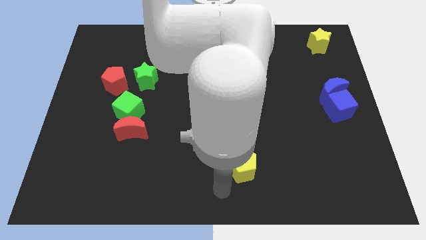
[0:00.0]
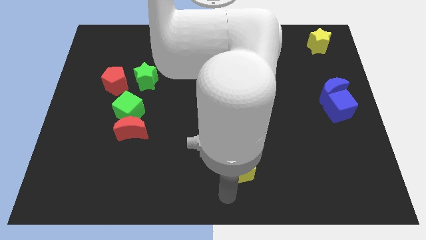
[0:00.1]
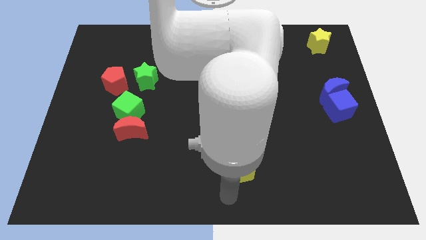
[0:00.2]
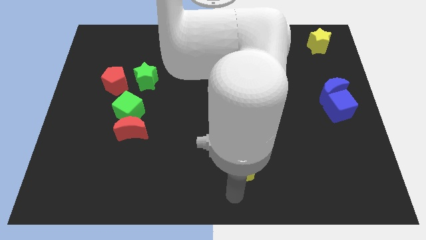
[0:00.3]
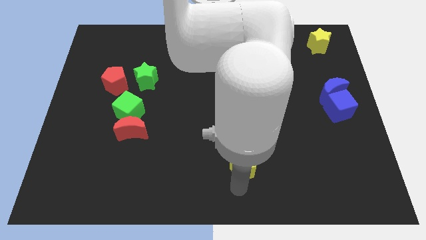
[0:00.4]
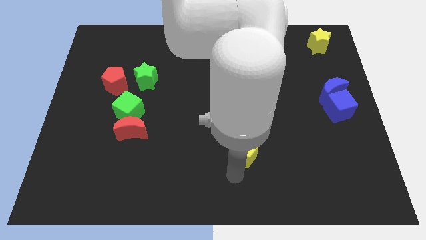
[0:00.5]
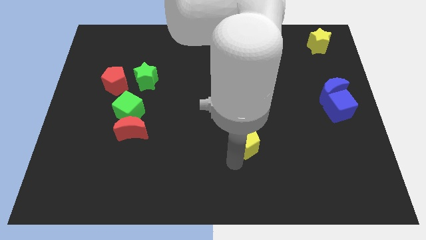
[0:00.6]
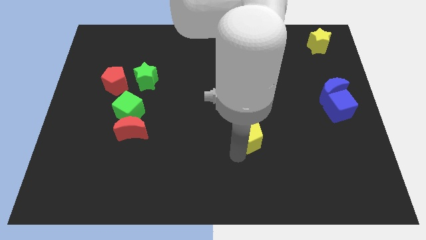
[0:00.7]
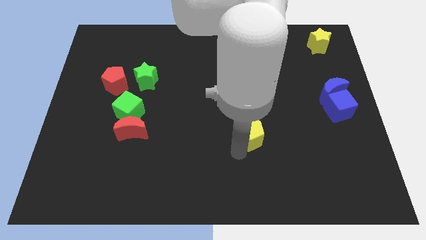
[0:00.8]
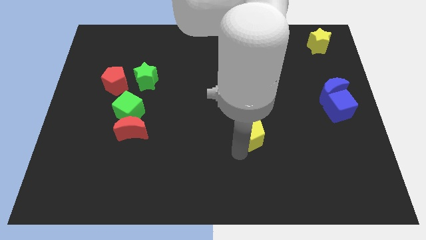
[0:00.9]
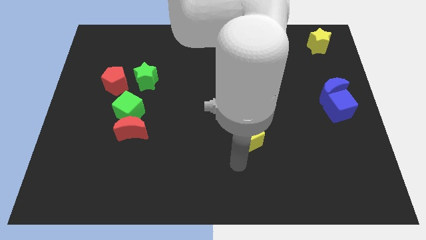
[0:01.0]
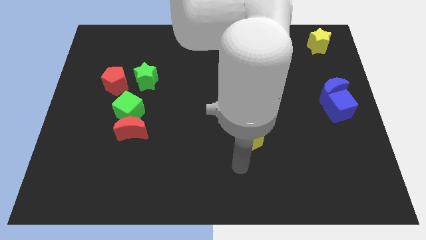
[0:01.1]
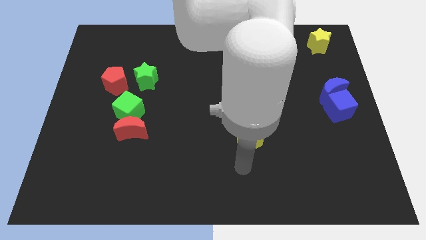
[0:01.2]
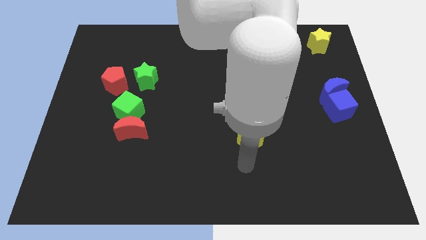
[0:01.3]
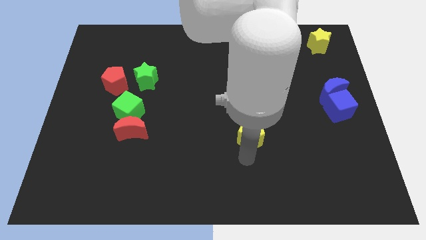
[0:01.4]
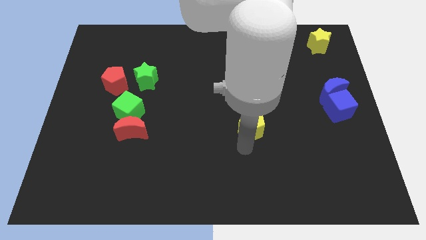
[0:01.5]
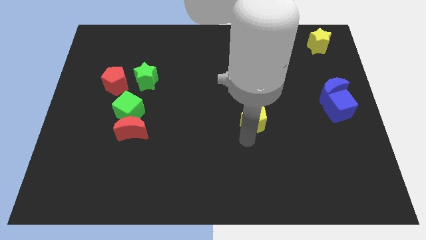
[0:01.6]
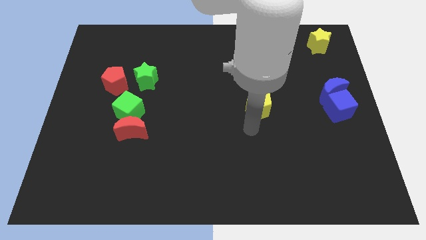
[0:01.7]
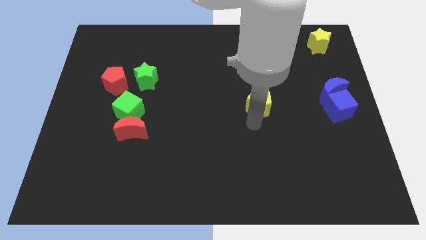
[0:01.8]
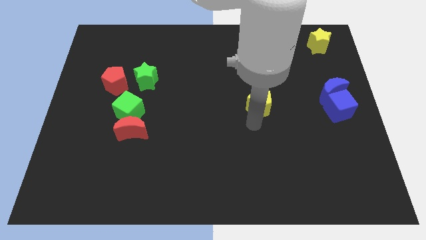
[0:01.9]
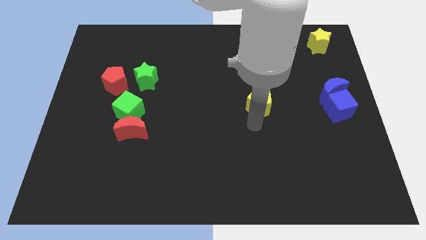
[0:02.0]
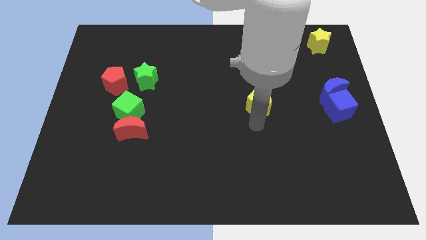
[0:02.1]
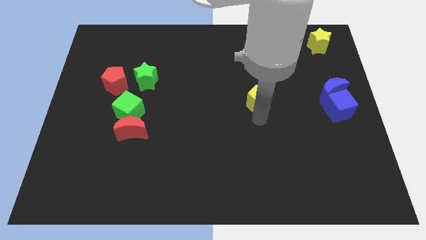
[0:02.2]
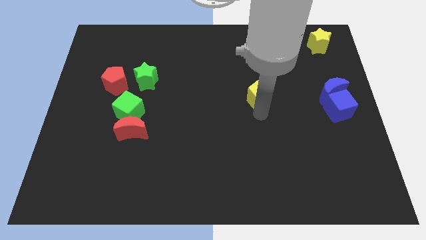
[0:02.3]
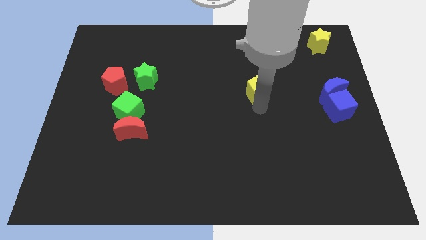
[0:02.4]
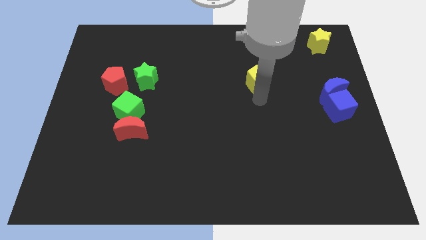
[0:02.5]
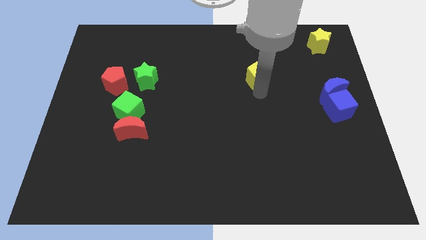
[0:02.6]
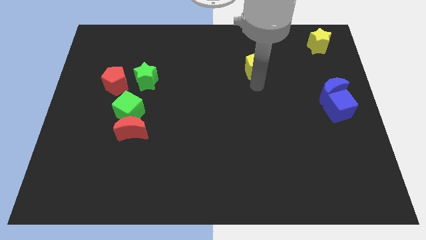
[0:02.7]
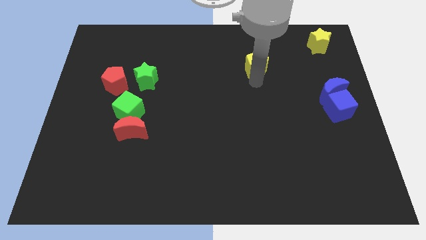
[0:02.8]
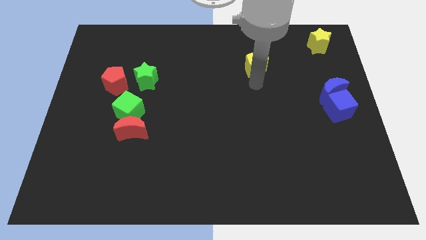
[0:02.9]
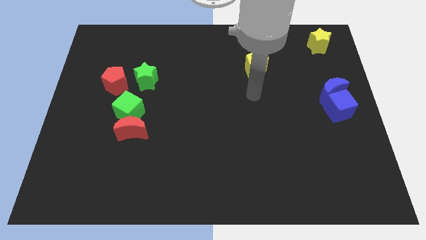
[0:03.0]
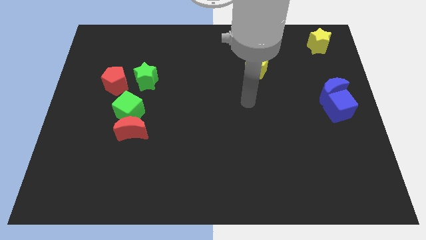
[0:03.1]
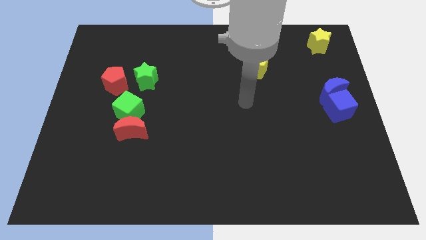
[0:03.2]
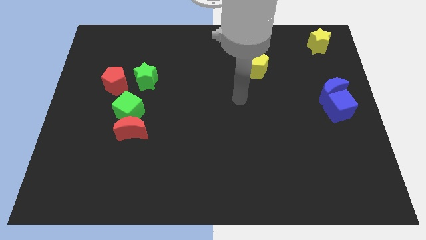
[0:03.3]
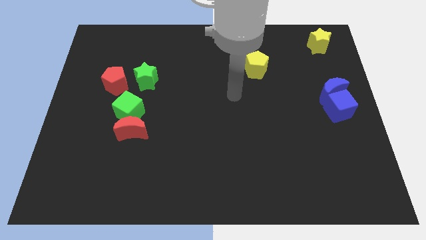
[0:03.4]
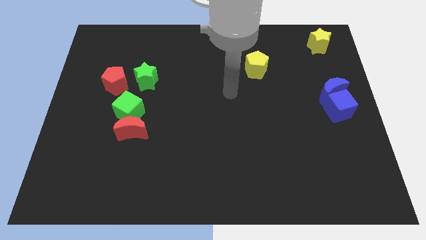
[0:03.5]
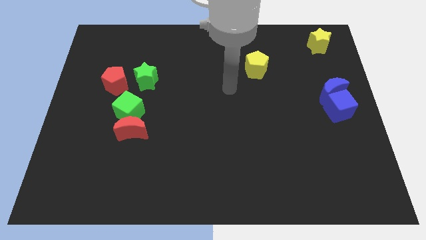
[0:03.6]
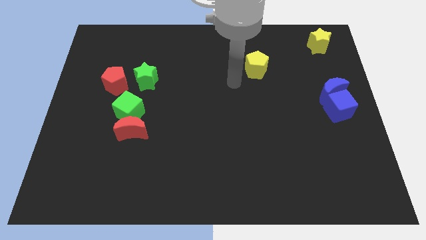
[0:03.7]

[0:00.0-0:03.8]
push the yellow pentagon towards the yellow star

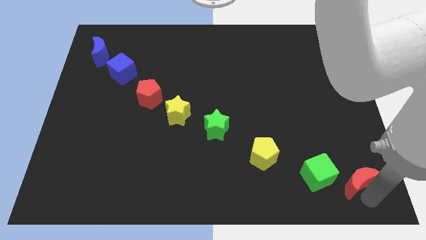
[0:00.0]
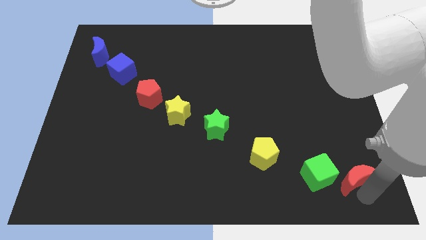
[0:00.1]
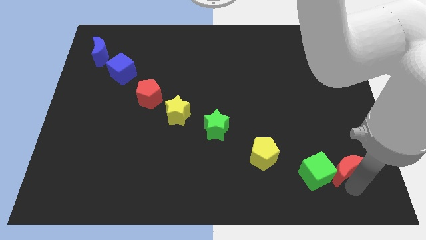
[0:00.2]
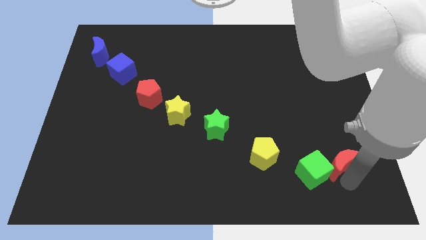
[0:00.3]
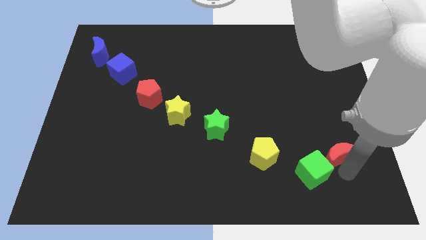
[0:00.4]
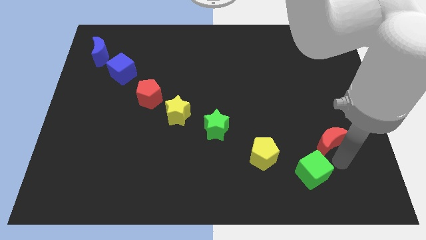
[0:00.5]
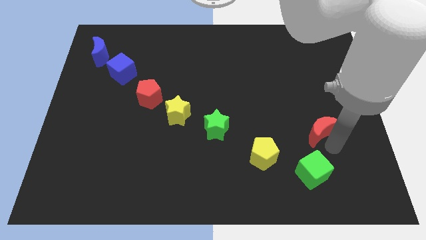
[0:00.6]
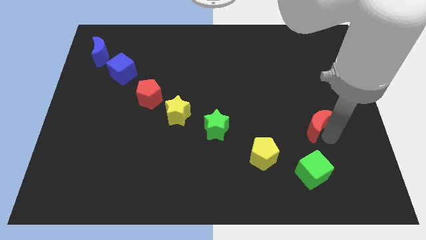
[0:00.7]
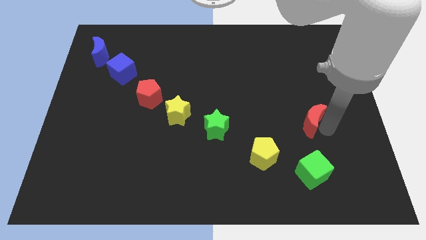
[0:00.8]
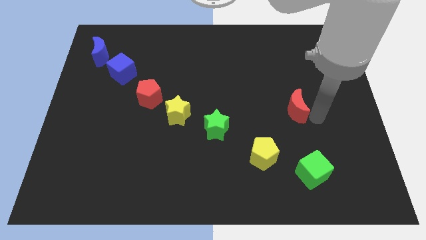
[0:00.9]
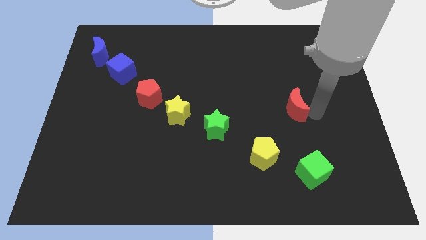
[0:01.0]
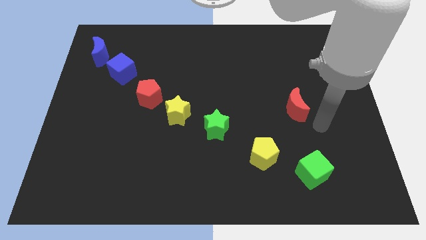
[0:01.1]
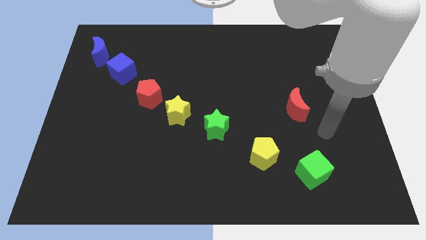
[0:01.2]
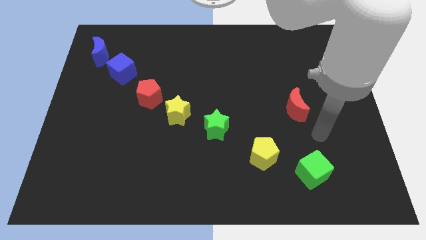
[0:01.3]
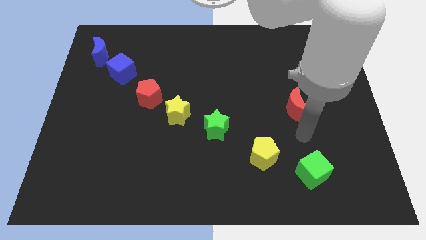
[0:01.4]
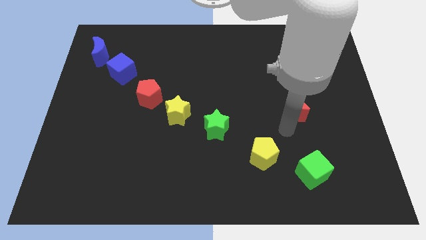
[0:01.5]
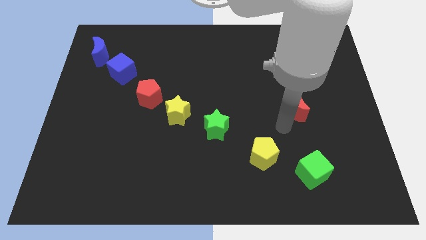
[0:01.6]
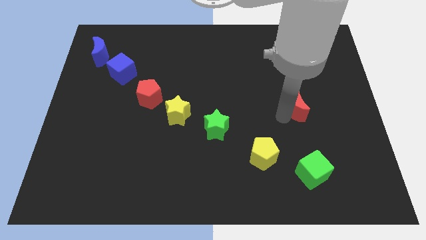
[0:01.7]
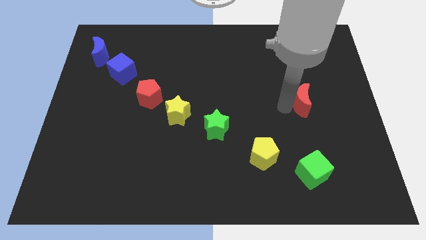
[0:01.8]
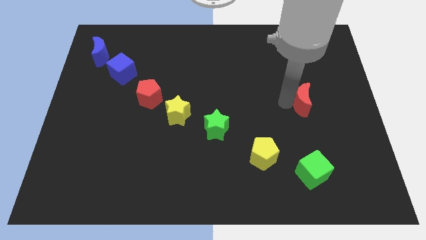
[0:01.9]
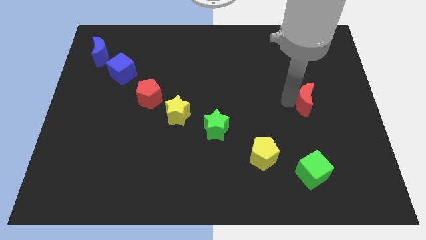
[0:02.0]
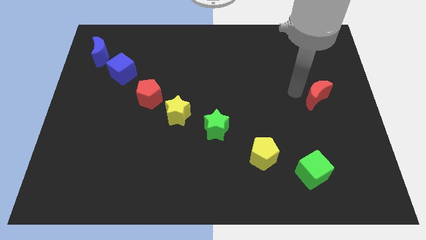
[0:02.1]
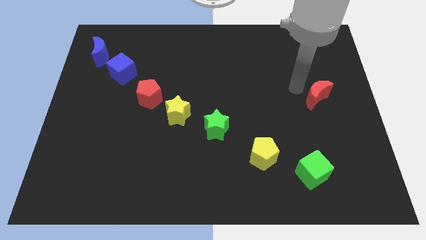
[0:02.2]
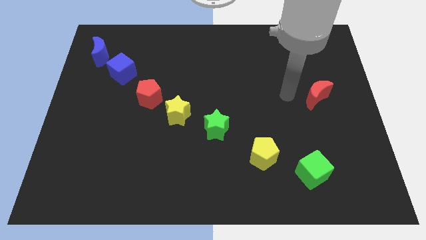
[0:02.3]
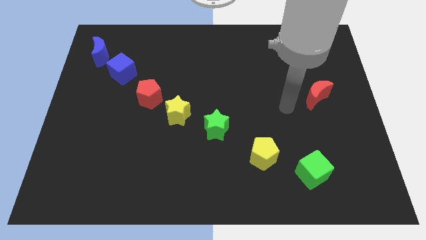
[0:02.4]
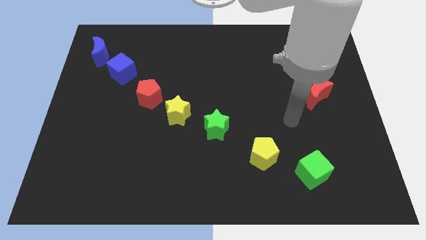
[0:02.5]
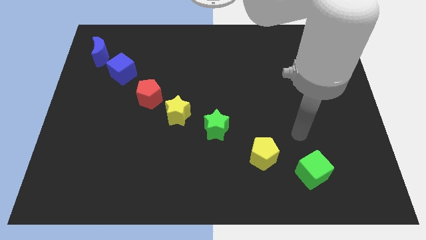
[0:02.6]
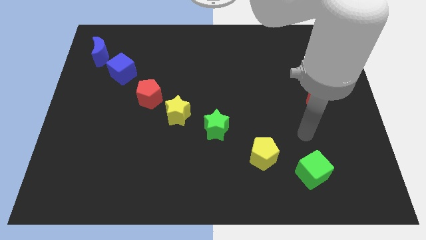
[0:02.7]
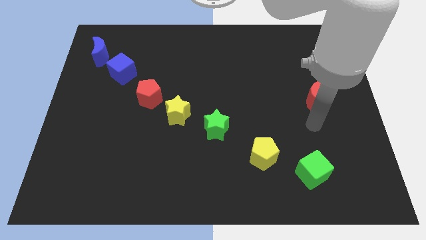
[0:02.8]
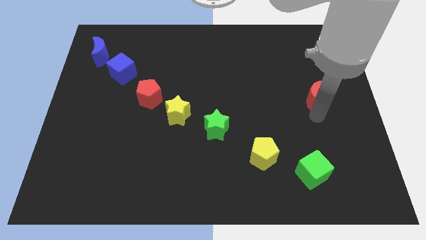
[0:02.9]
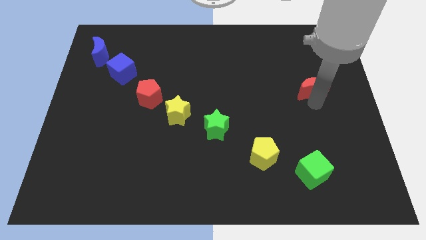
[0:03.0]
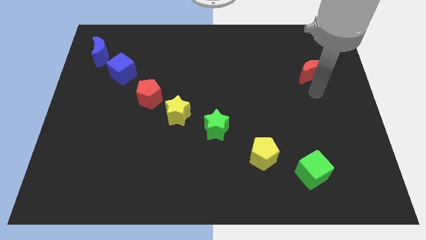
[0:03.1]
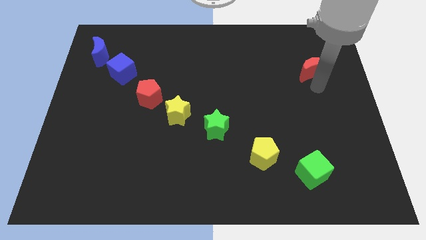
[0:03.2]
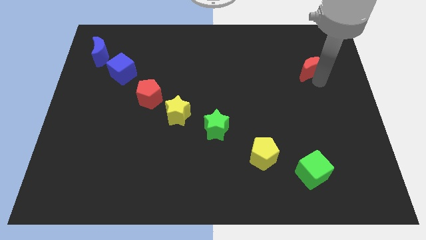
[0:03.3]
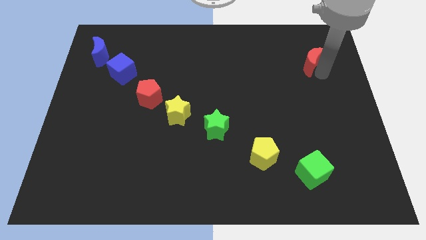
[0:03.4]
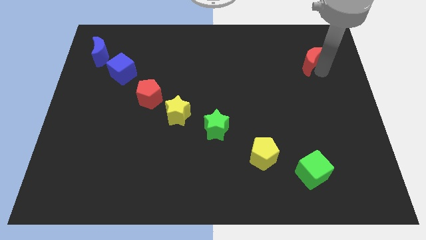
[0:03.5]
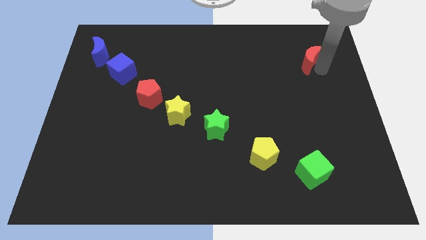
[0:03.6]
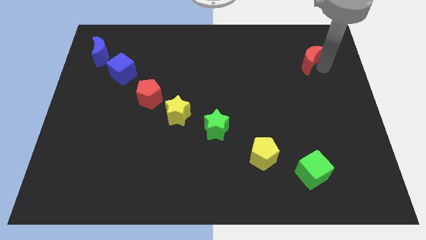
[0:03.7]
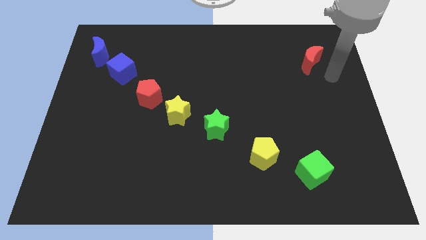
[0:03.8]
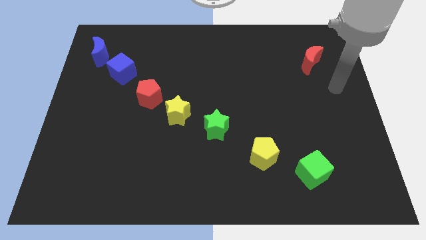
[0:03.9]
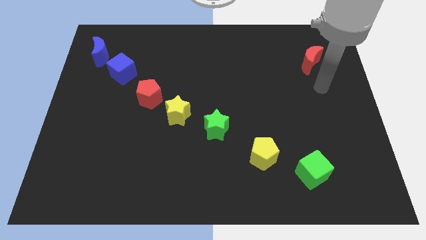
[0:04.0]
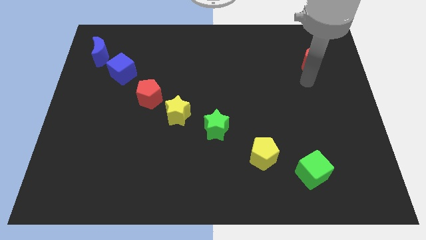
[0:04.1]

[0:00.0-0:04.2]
move the red crescent to the top right of the board

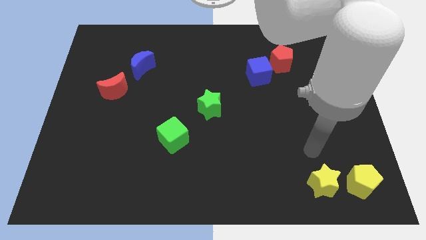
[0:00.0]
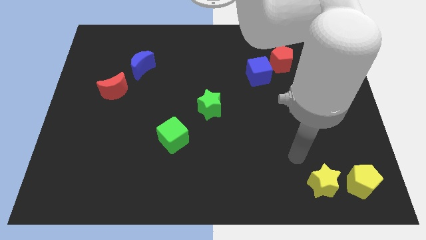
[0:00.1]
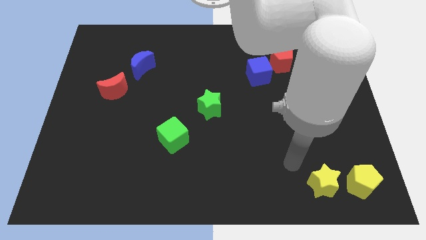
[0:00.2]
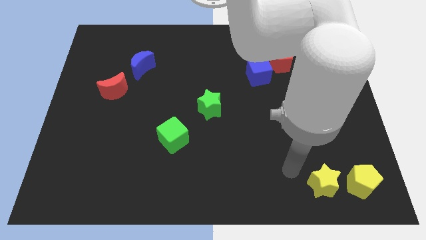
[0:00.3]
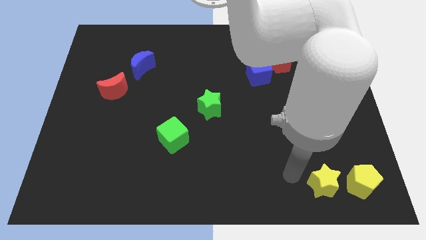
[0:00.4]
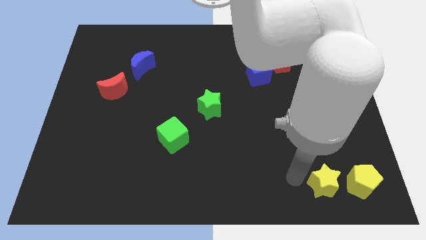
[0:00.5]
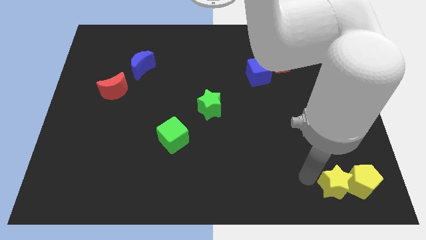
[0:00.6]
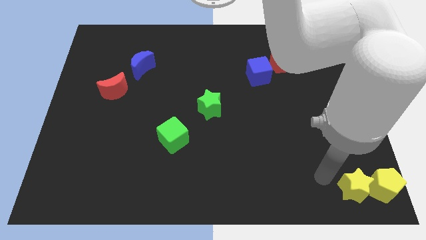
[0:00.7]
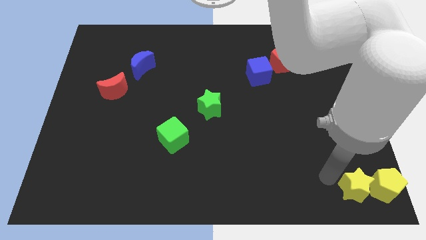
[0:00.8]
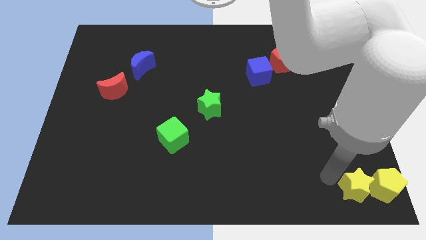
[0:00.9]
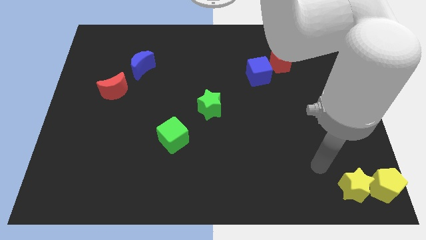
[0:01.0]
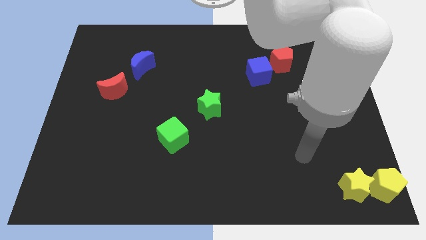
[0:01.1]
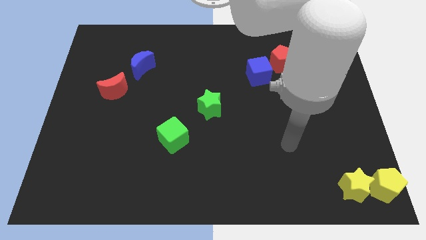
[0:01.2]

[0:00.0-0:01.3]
move the yellow star into the yellow pentagon
